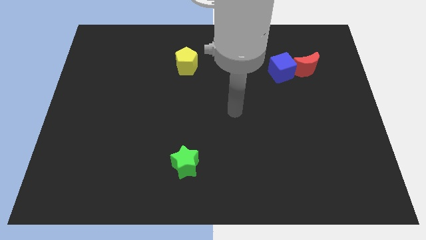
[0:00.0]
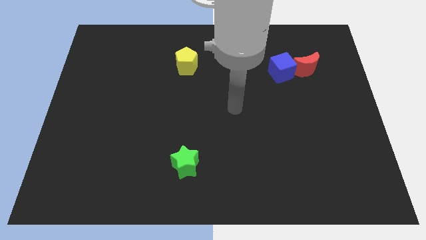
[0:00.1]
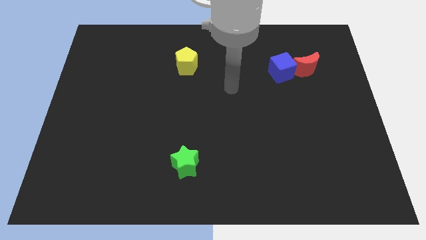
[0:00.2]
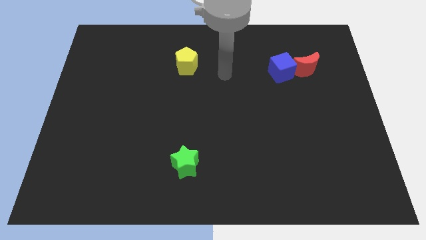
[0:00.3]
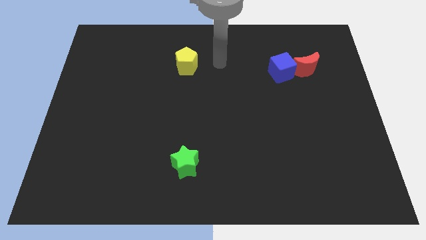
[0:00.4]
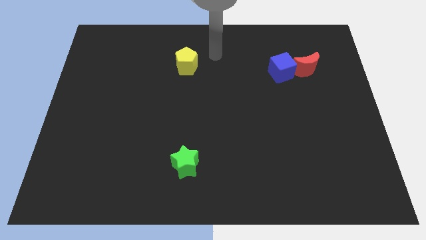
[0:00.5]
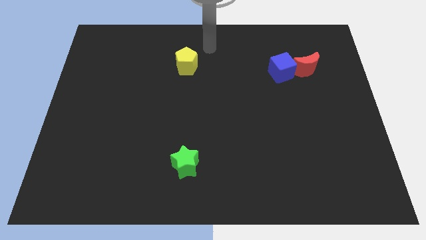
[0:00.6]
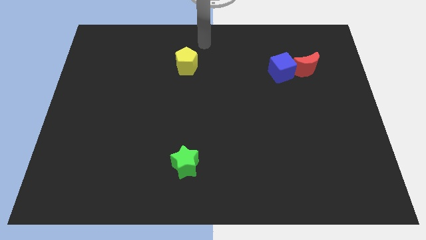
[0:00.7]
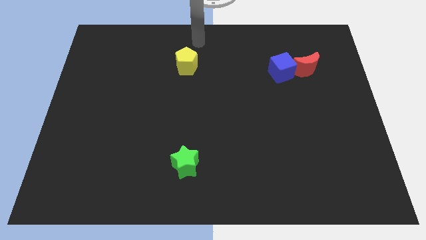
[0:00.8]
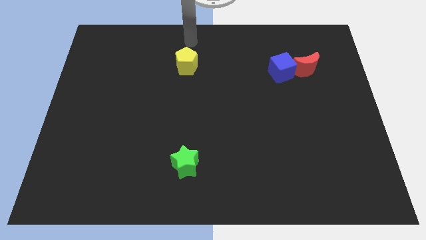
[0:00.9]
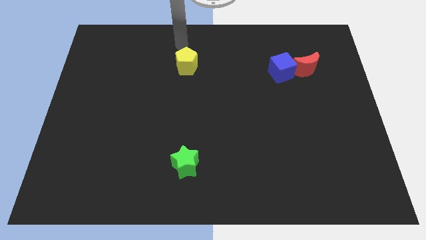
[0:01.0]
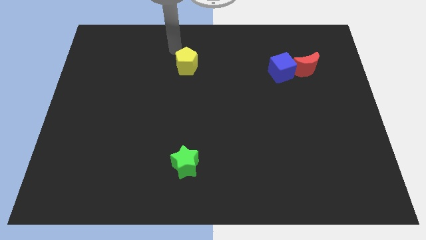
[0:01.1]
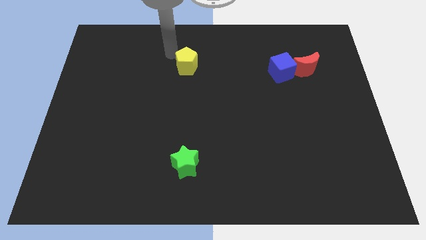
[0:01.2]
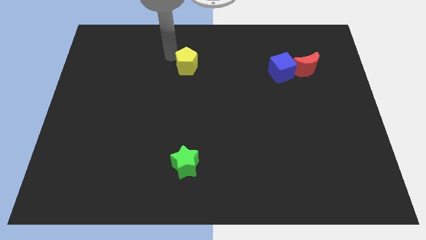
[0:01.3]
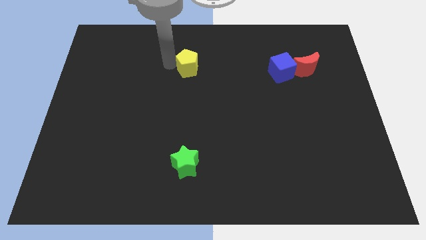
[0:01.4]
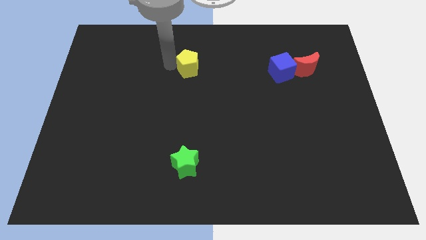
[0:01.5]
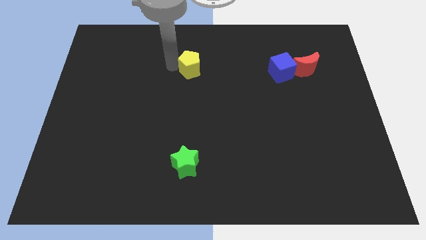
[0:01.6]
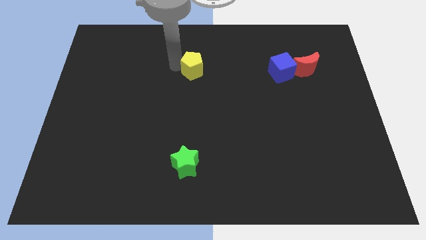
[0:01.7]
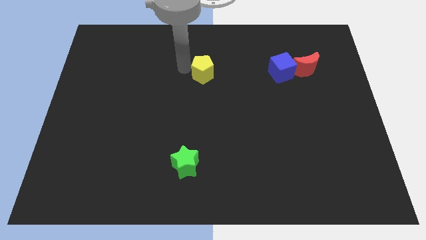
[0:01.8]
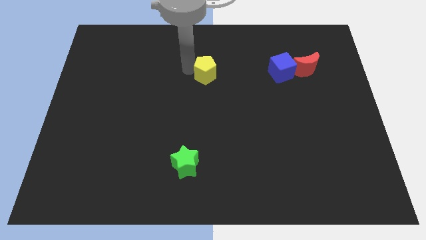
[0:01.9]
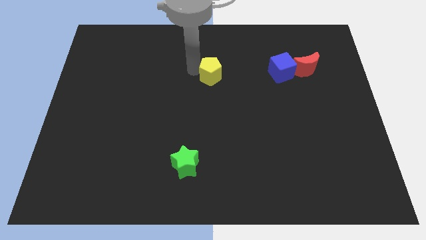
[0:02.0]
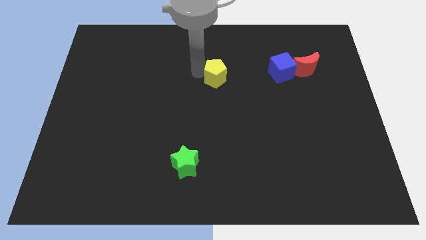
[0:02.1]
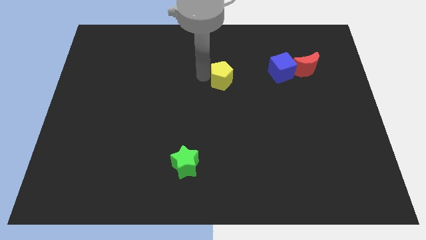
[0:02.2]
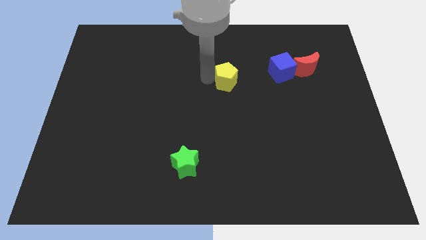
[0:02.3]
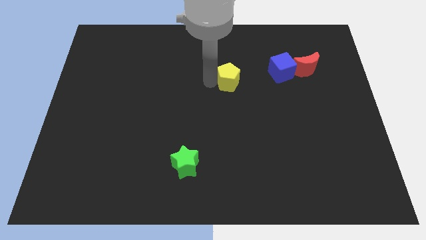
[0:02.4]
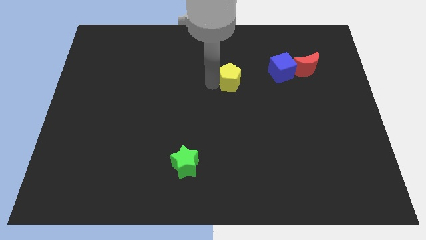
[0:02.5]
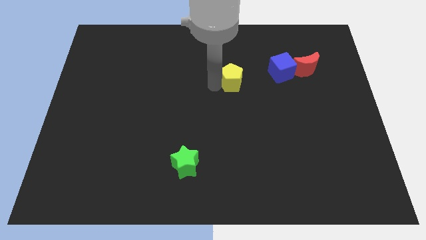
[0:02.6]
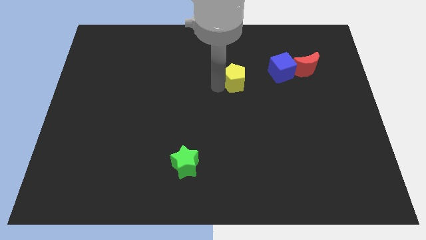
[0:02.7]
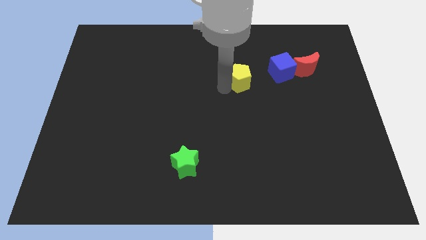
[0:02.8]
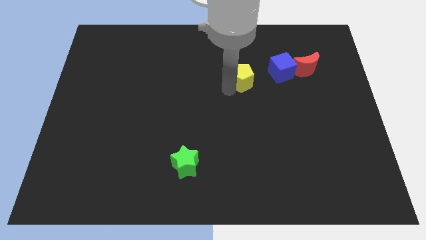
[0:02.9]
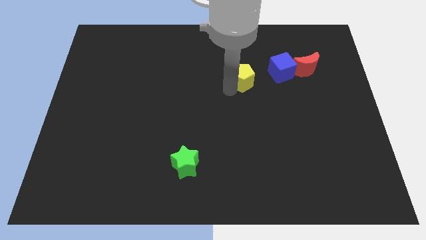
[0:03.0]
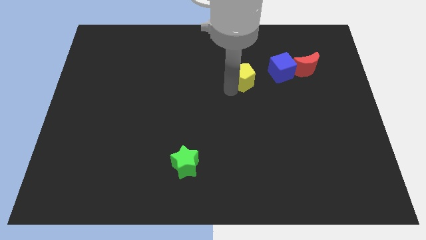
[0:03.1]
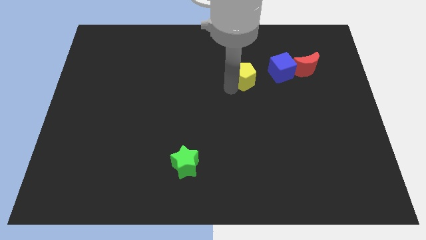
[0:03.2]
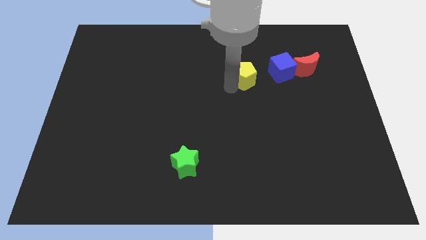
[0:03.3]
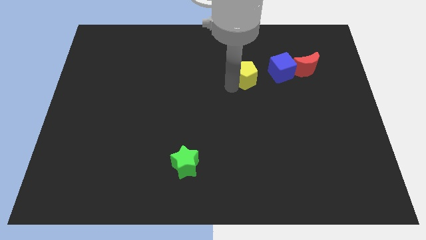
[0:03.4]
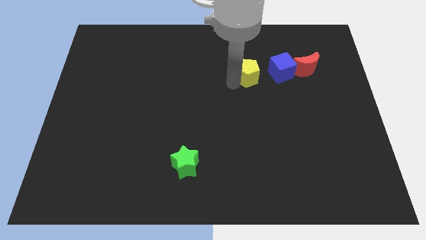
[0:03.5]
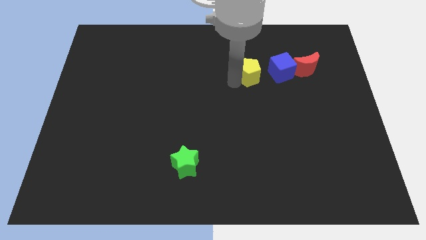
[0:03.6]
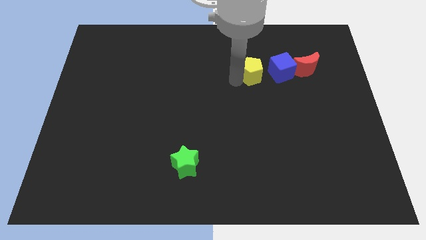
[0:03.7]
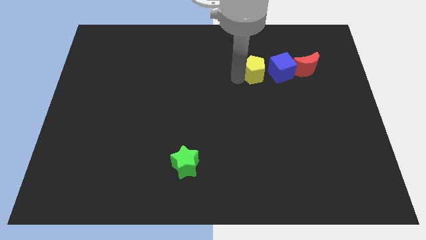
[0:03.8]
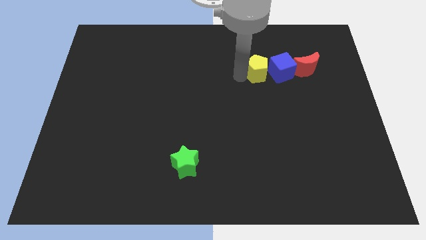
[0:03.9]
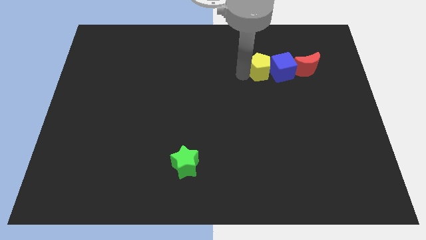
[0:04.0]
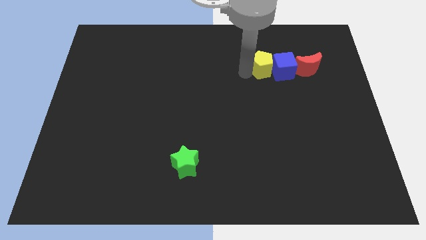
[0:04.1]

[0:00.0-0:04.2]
slide the yellow block close to the cube

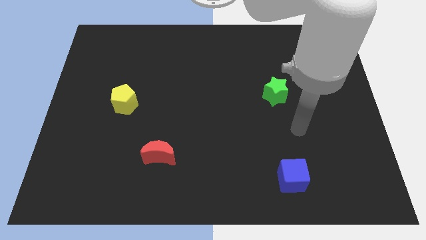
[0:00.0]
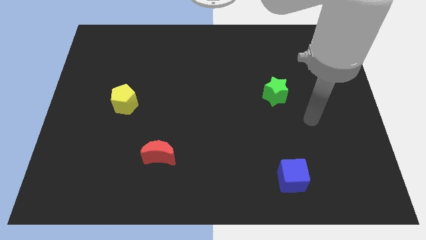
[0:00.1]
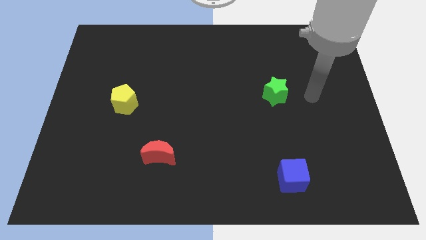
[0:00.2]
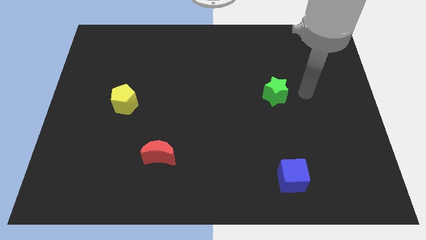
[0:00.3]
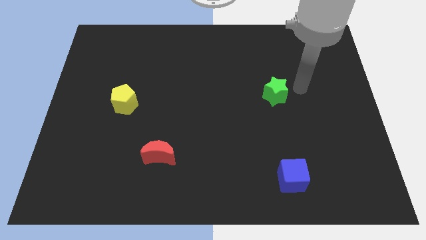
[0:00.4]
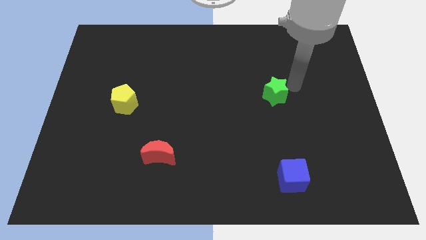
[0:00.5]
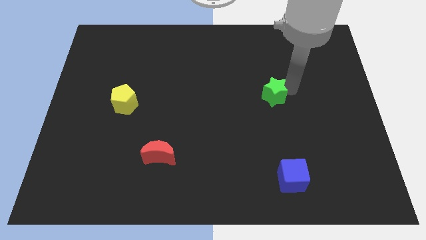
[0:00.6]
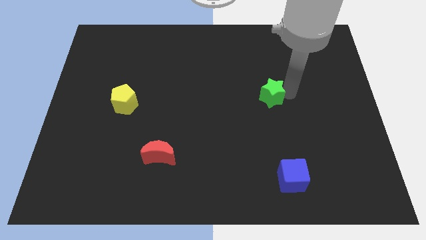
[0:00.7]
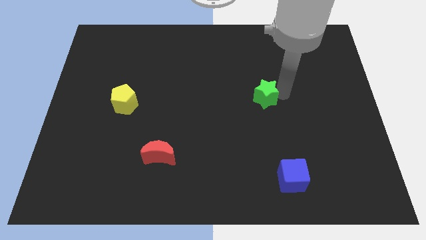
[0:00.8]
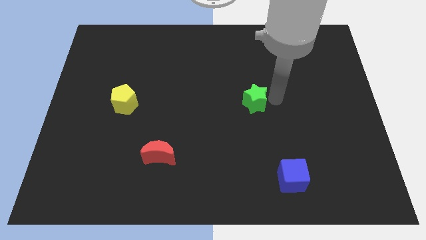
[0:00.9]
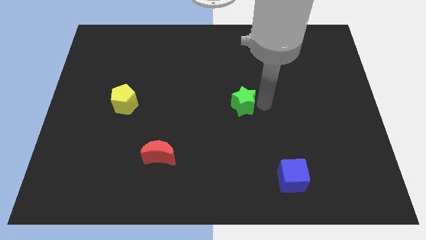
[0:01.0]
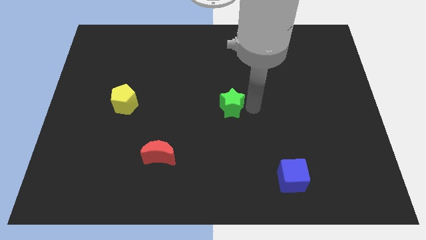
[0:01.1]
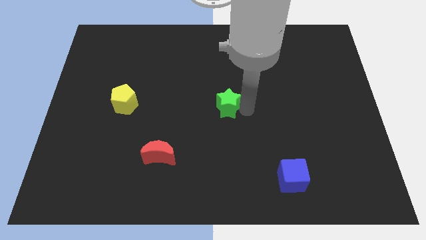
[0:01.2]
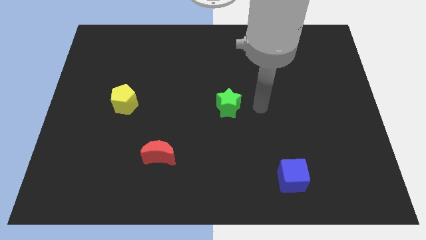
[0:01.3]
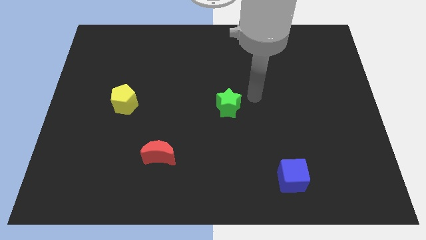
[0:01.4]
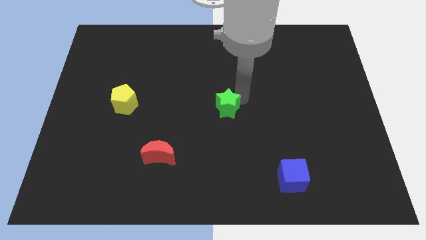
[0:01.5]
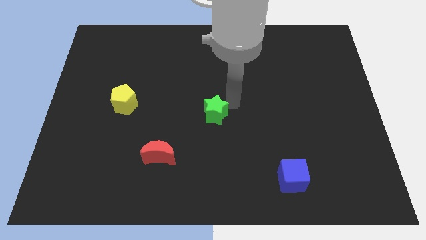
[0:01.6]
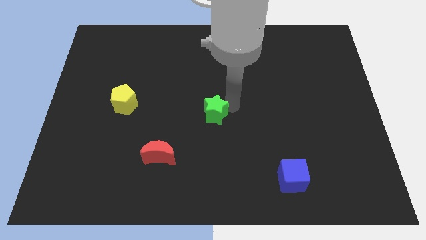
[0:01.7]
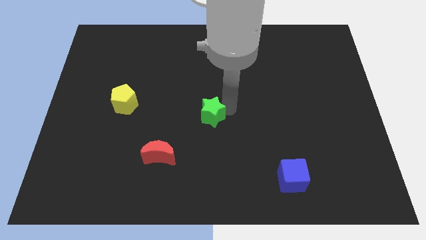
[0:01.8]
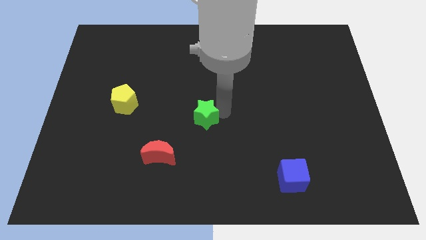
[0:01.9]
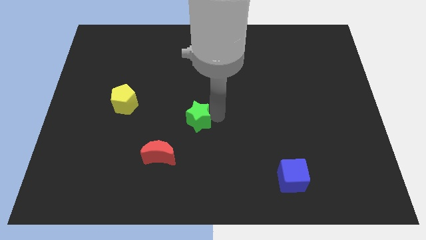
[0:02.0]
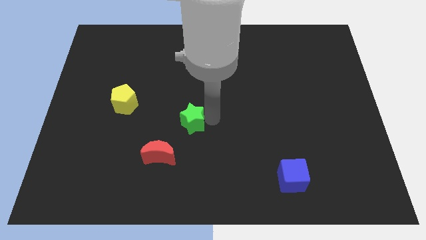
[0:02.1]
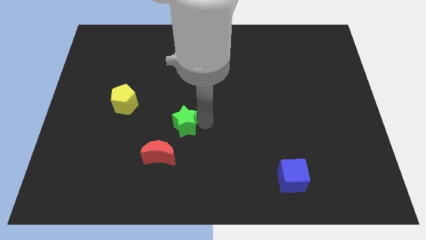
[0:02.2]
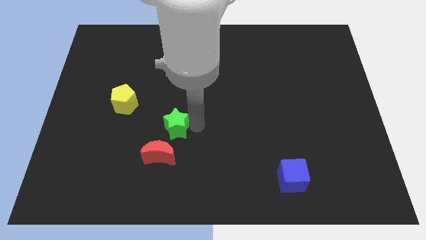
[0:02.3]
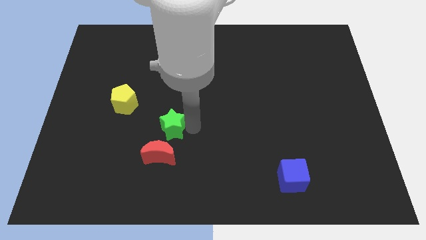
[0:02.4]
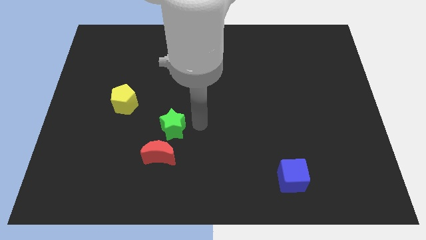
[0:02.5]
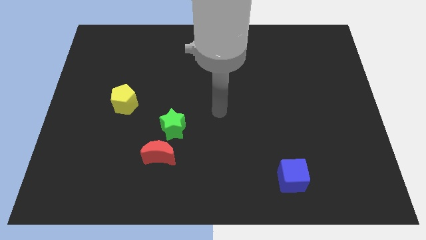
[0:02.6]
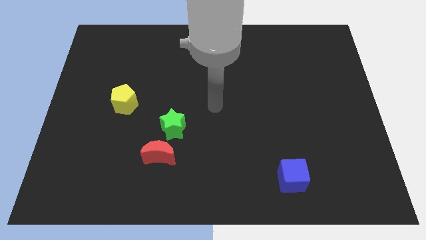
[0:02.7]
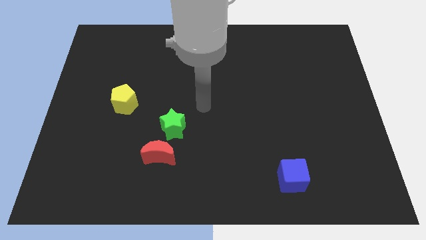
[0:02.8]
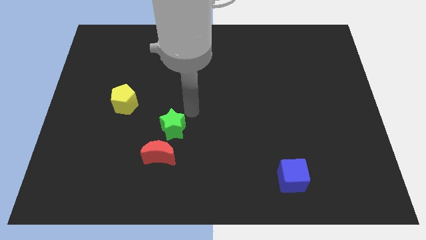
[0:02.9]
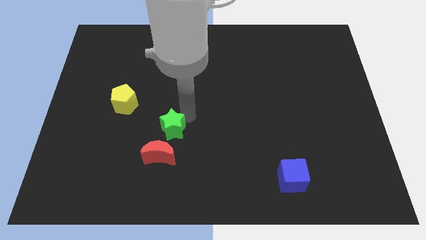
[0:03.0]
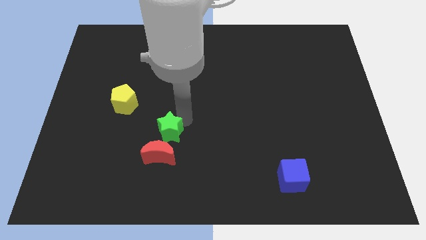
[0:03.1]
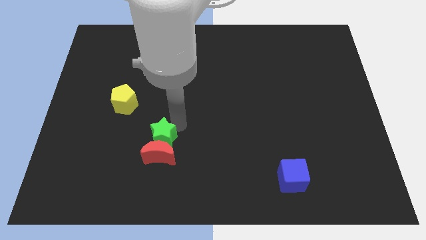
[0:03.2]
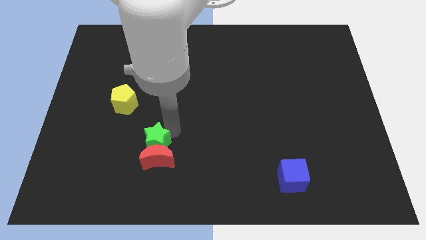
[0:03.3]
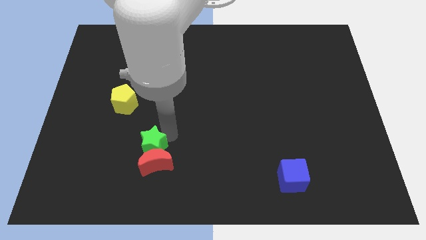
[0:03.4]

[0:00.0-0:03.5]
push the green star next to the red block

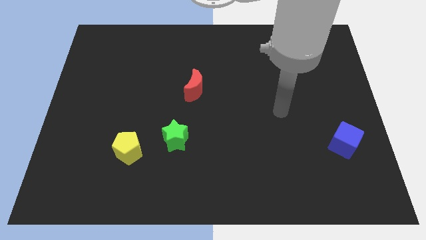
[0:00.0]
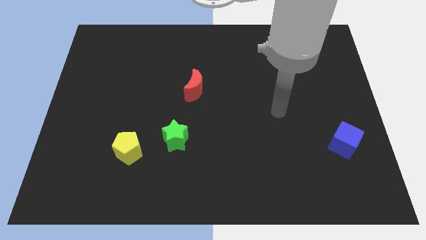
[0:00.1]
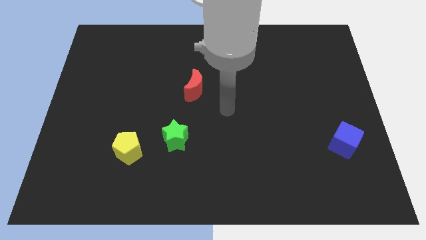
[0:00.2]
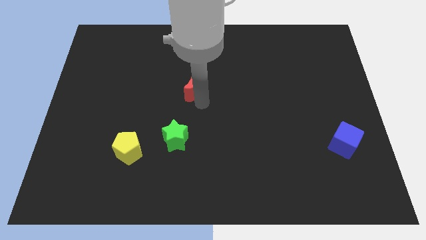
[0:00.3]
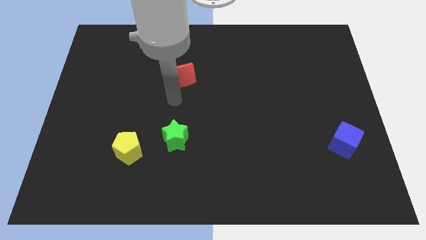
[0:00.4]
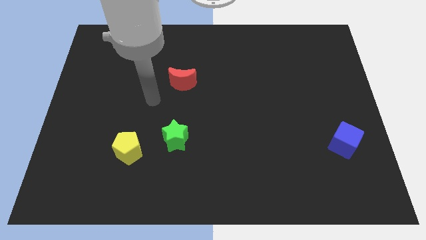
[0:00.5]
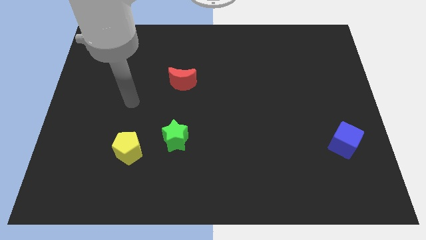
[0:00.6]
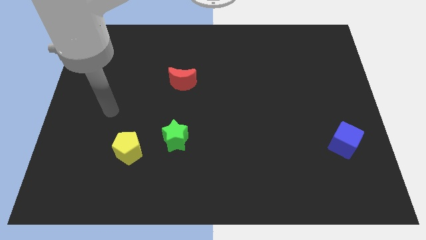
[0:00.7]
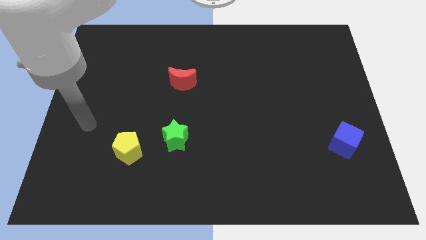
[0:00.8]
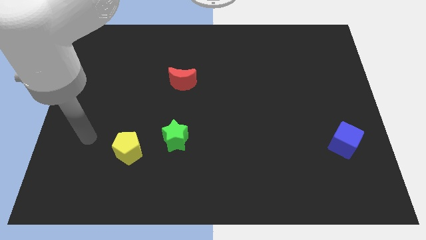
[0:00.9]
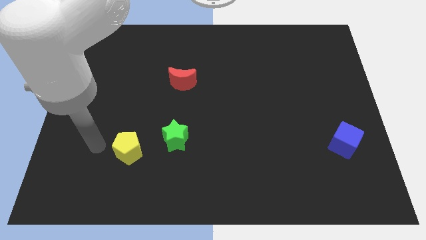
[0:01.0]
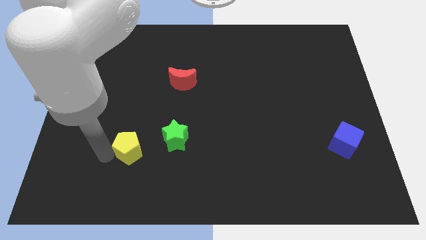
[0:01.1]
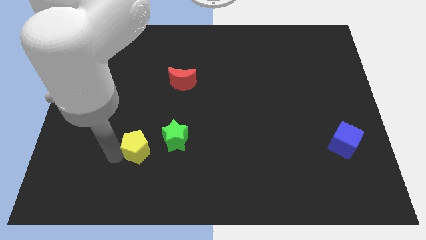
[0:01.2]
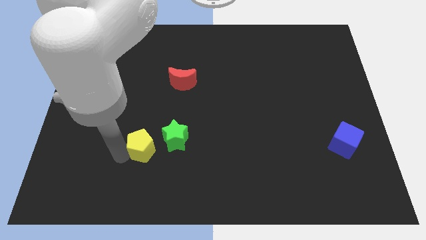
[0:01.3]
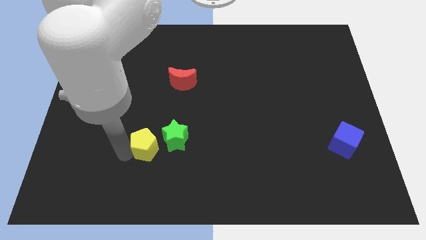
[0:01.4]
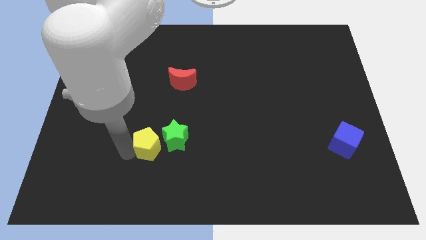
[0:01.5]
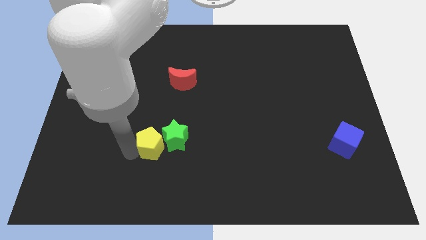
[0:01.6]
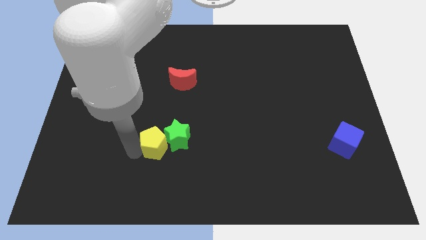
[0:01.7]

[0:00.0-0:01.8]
push the yellow pentagon close to the green block
